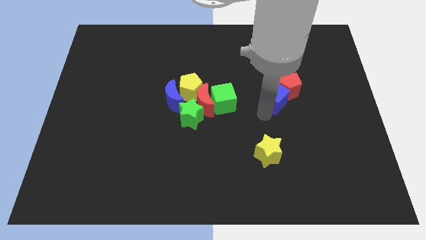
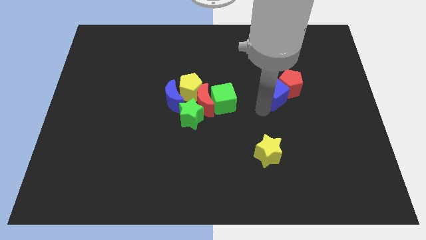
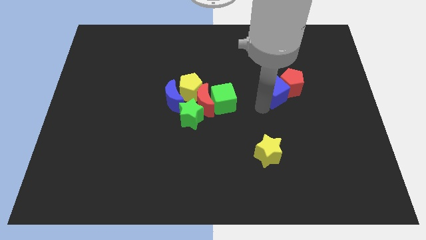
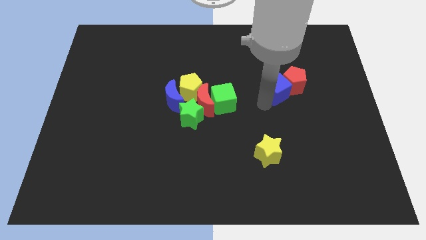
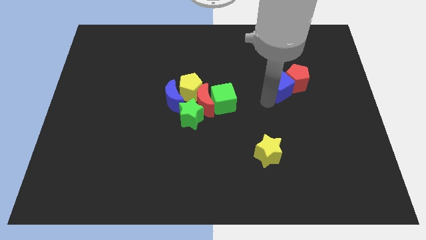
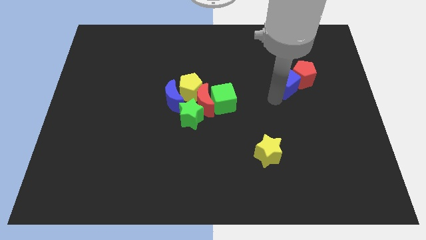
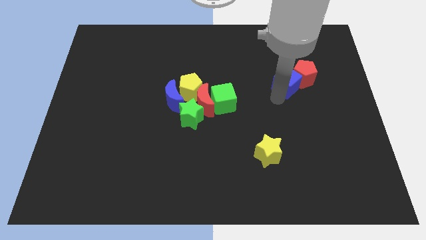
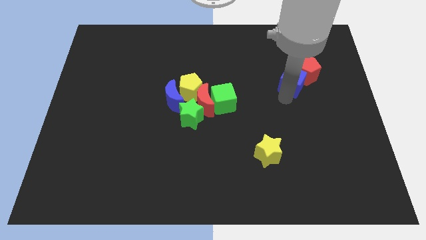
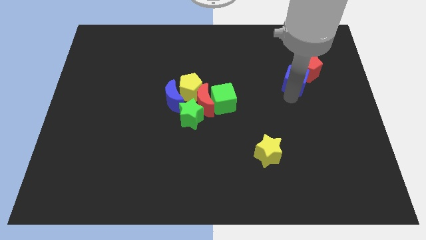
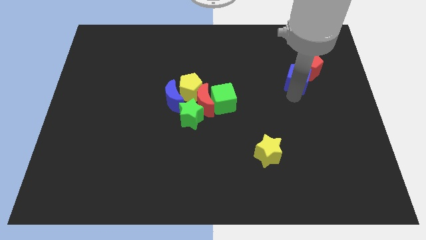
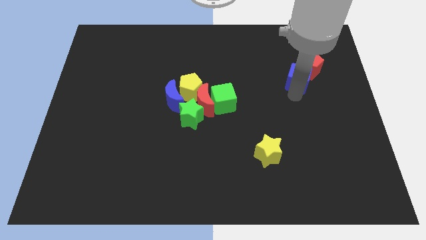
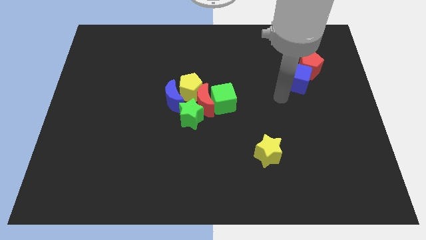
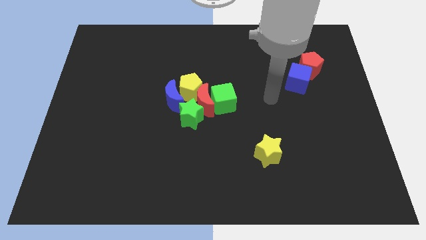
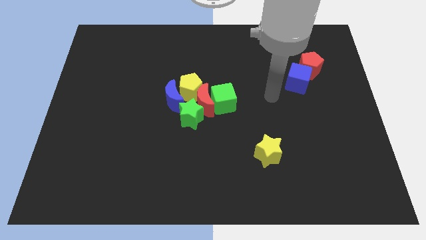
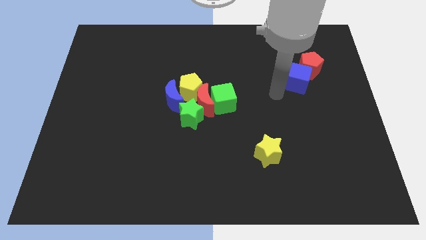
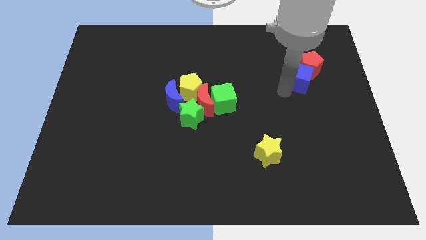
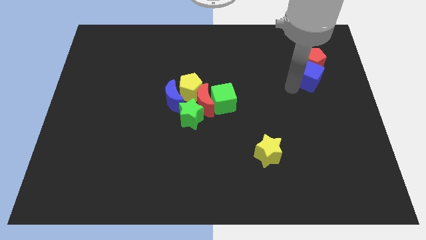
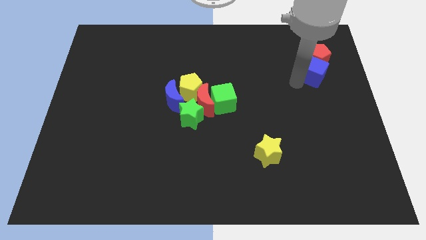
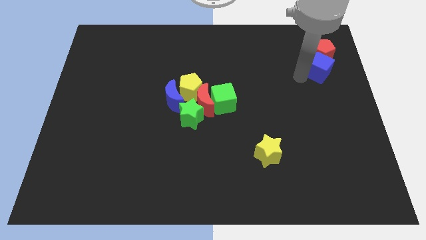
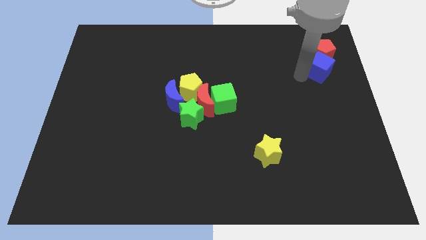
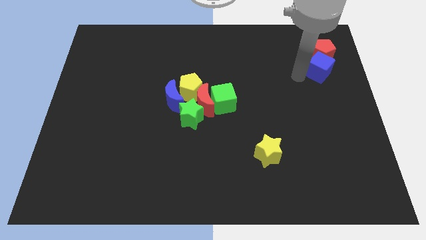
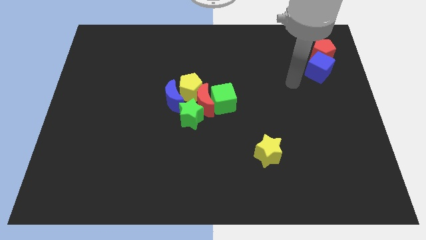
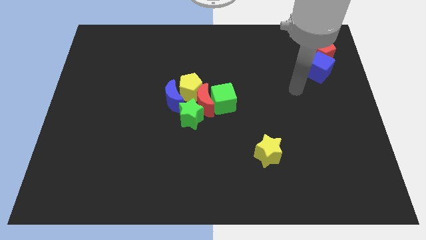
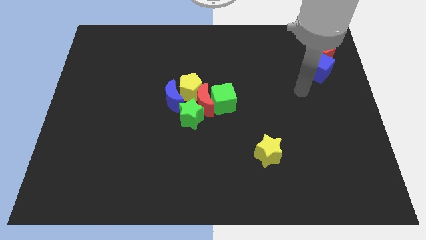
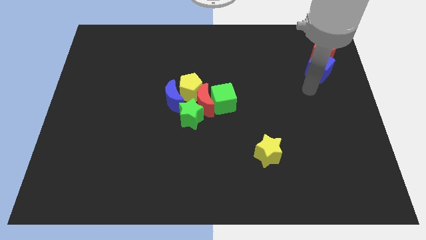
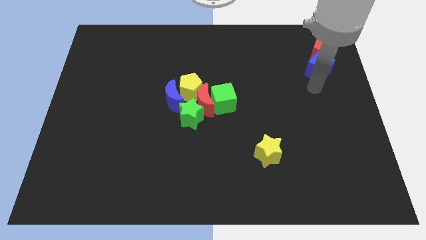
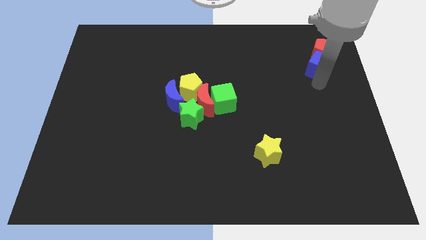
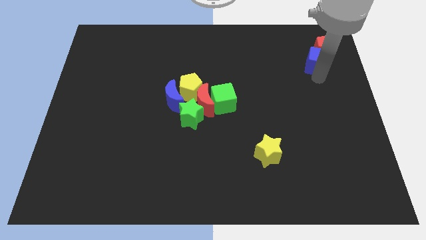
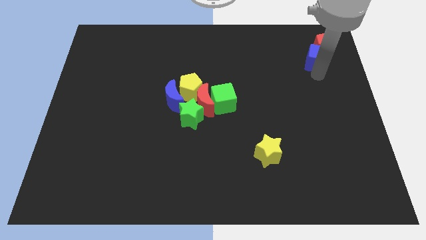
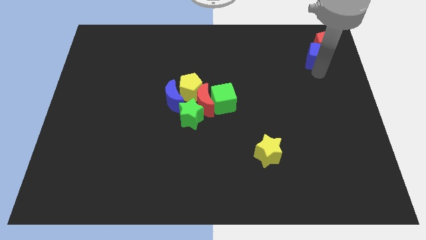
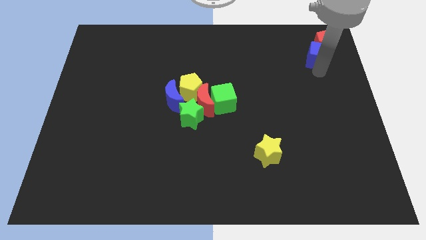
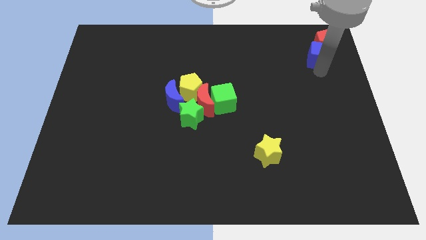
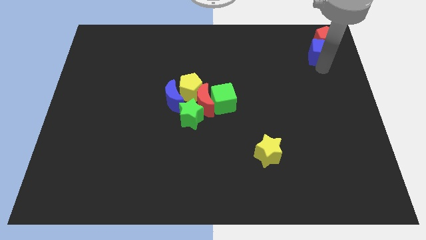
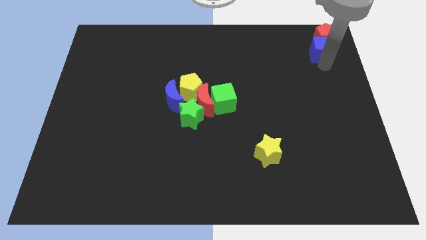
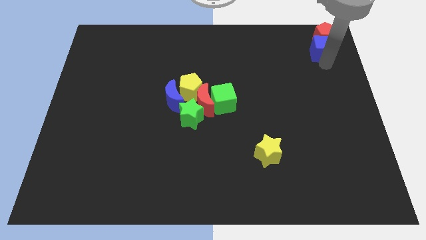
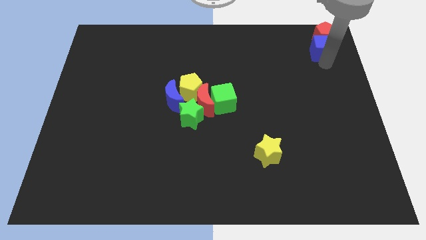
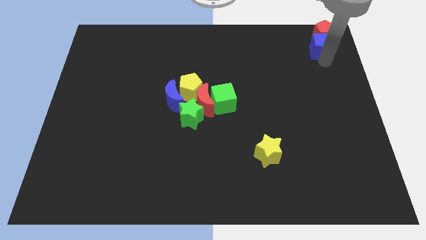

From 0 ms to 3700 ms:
push the blue cube along with the red pentagon to the top right

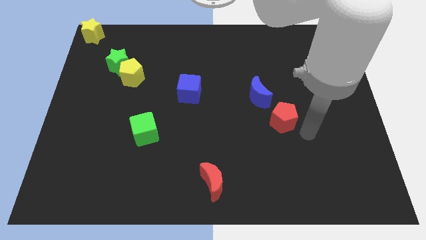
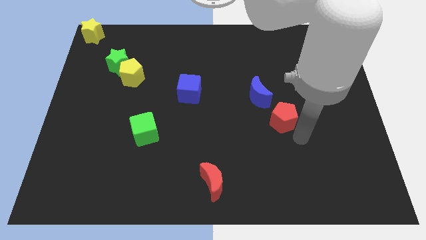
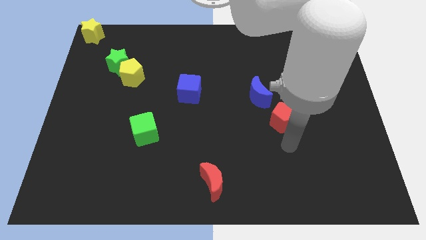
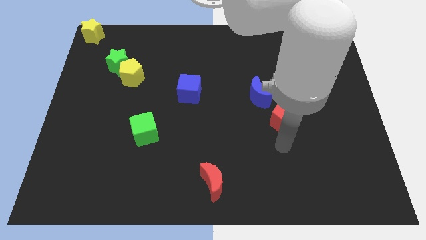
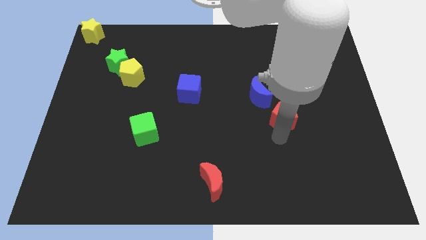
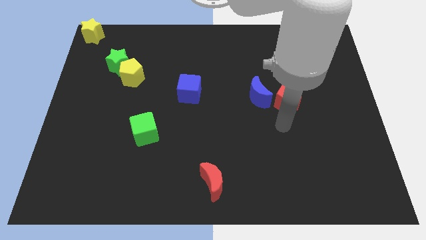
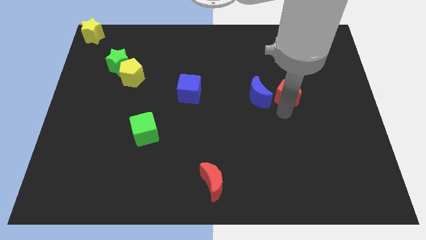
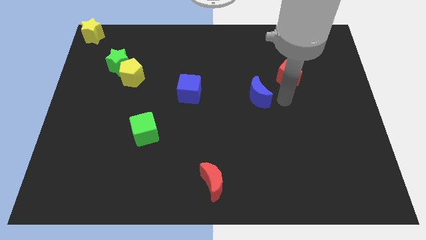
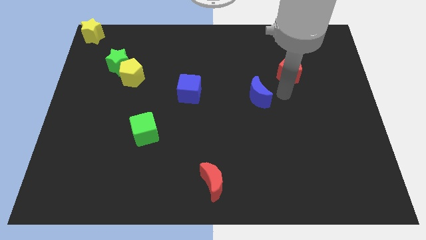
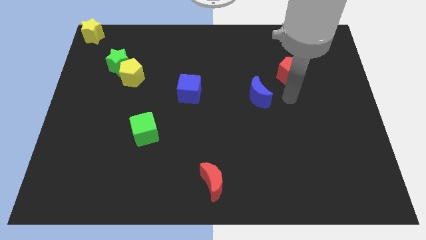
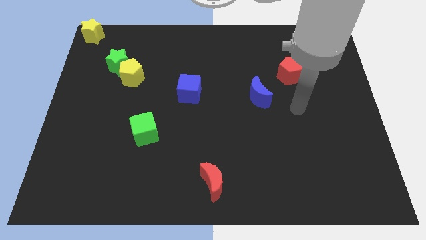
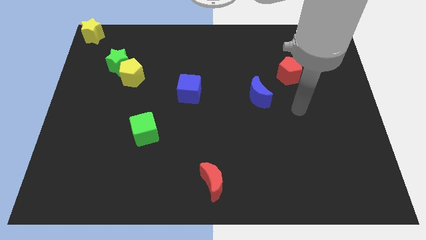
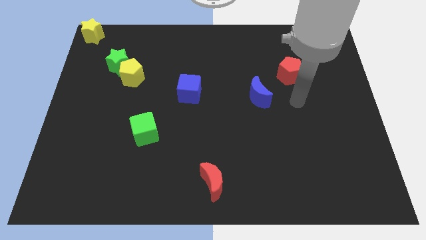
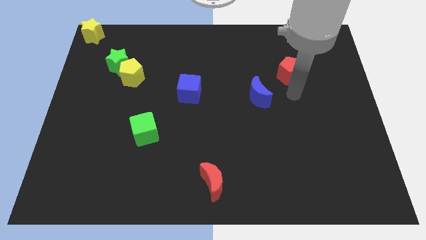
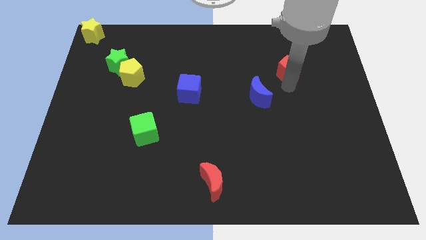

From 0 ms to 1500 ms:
push the red pentagon towards the top right side of the board

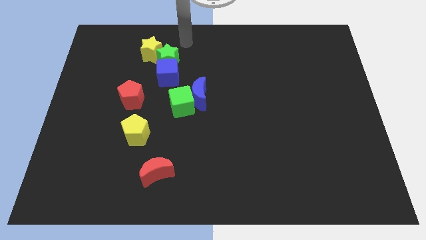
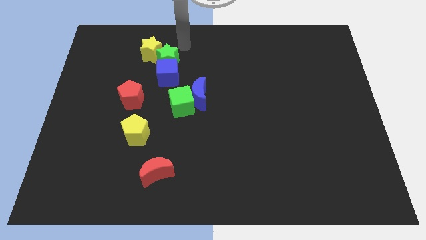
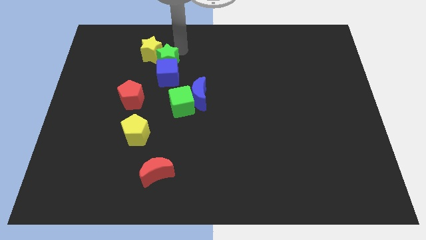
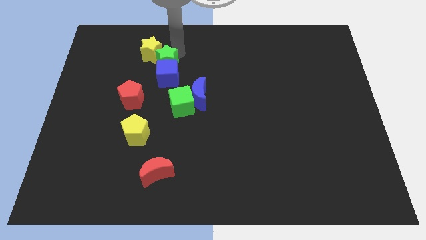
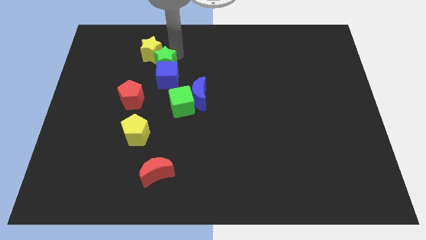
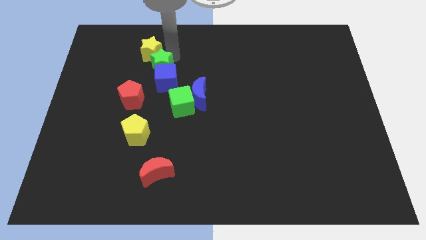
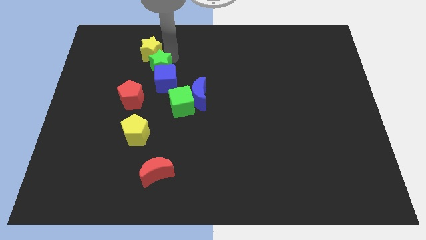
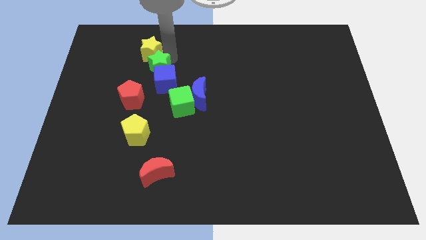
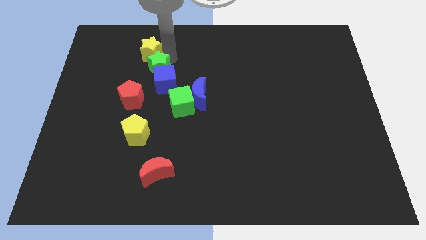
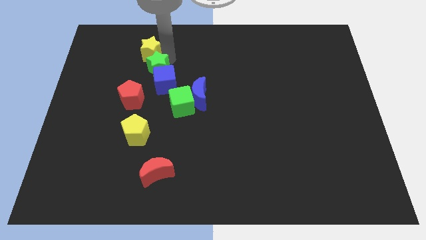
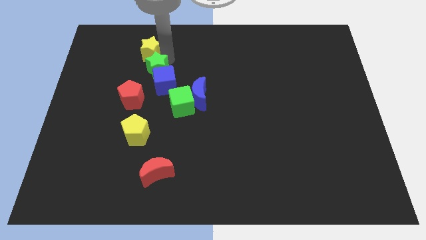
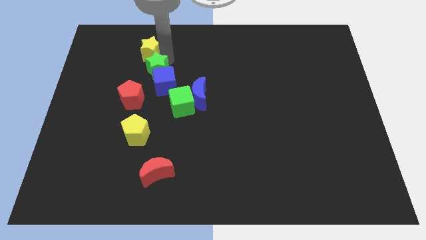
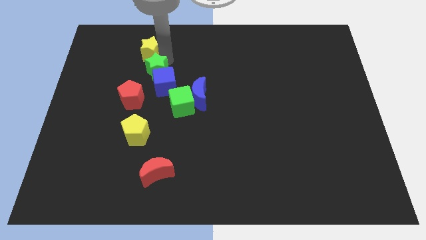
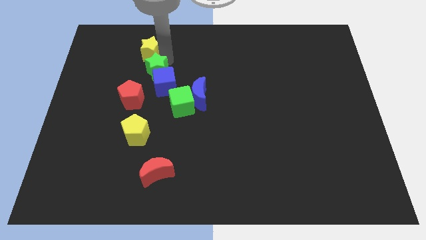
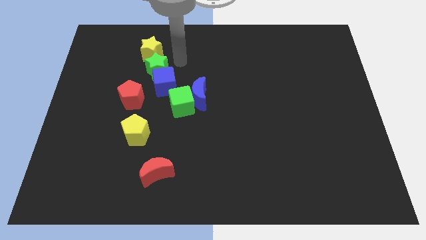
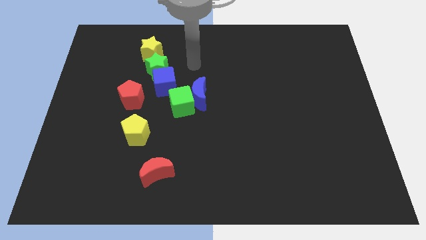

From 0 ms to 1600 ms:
put the green star in between the blue cube and the yellow star

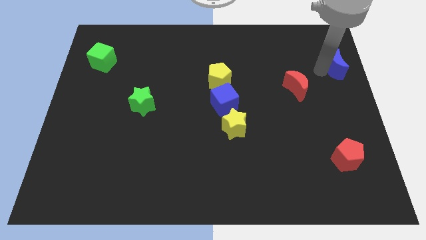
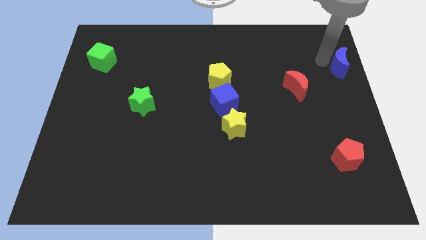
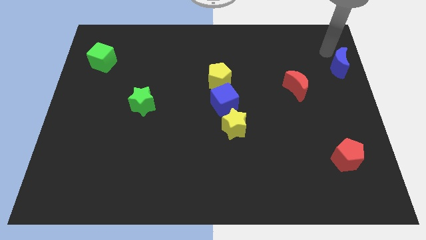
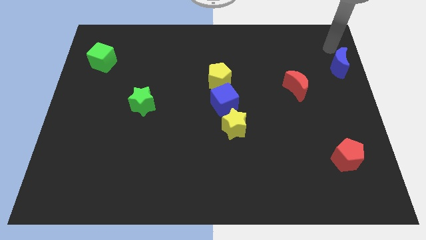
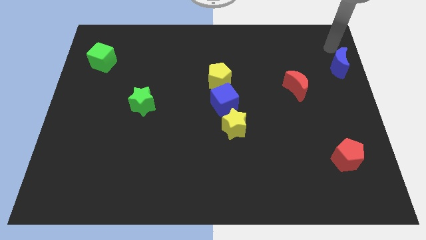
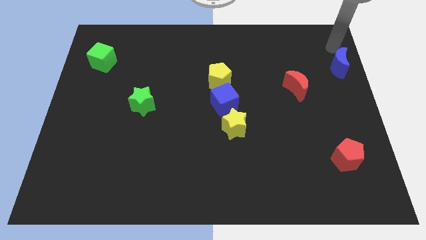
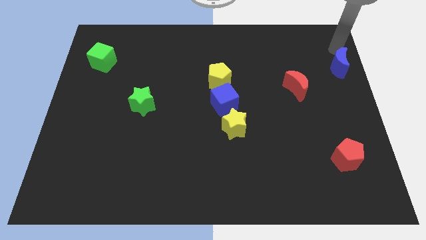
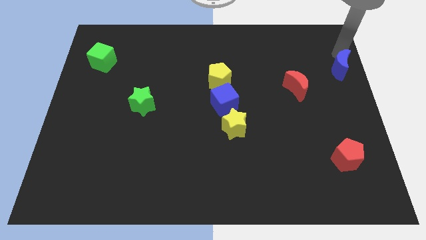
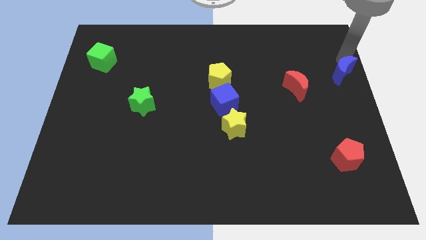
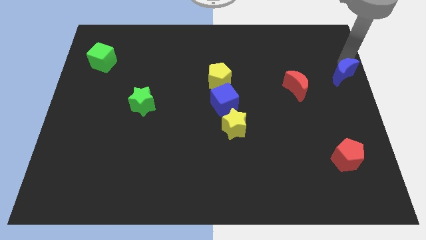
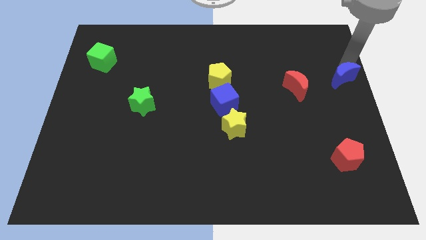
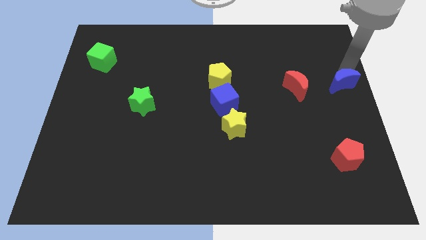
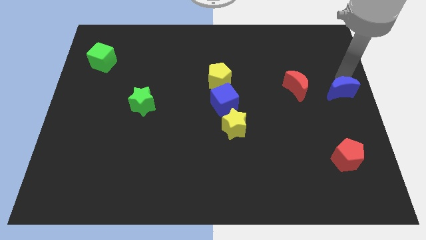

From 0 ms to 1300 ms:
place the blue crescent parallel to the right side of the red moon

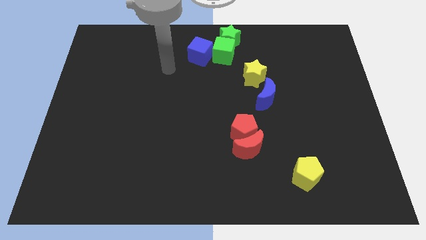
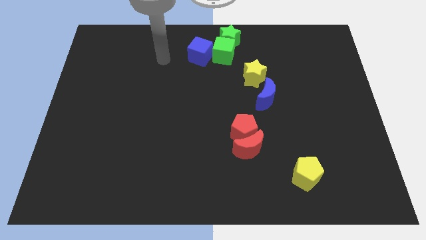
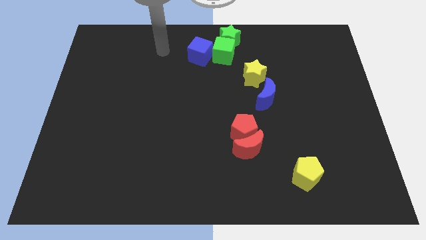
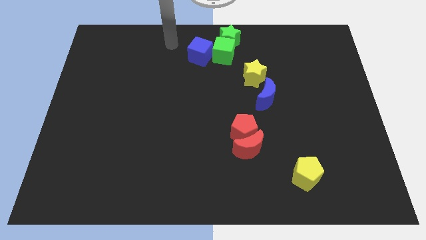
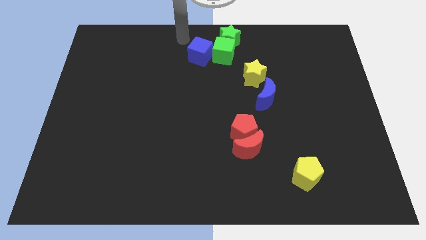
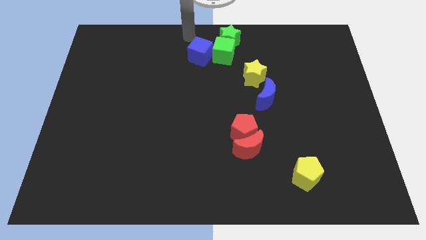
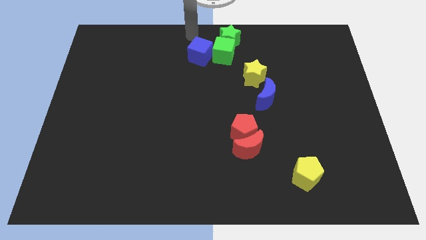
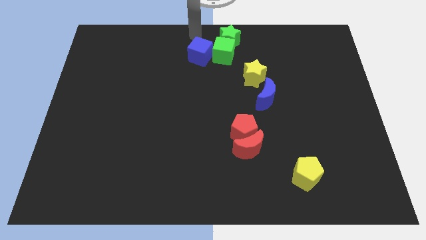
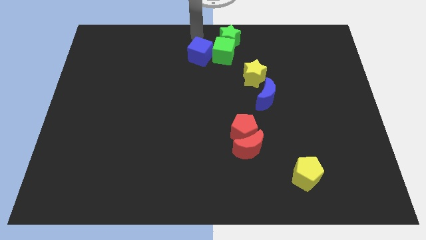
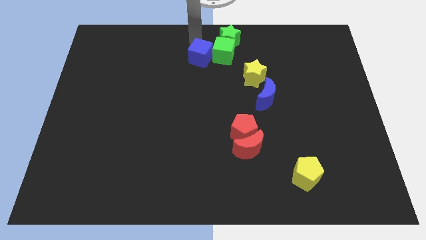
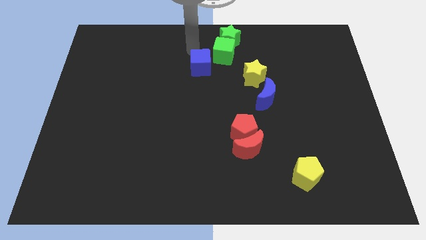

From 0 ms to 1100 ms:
tap the top side of the blue cube
